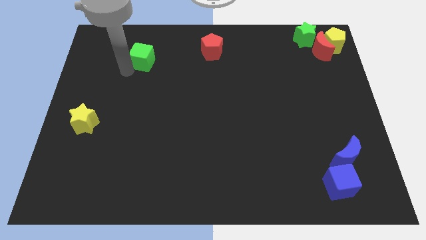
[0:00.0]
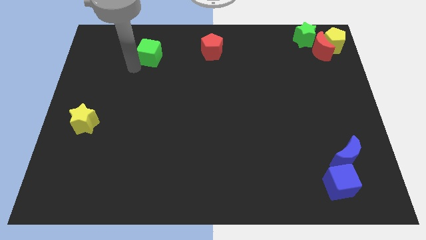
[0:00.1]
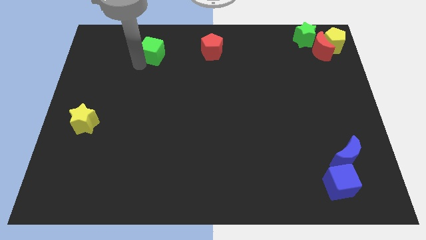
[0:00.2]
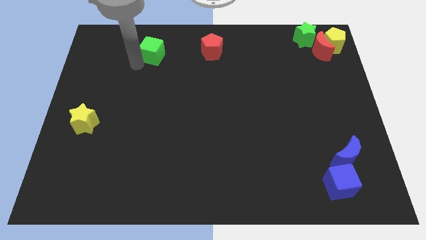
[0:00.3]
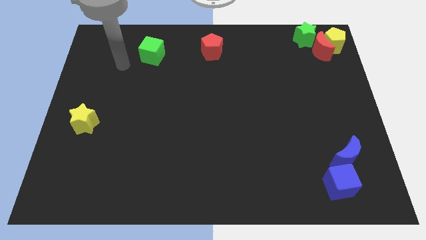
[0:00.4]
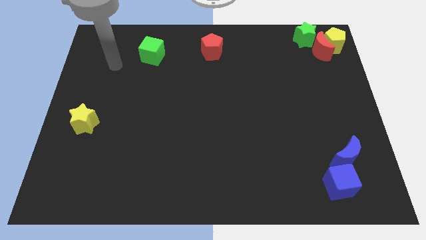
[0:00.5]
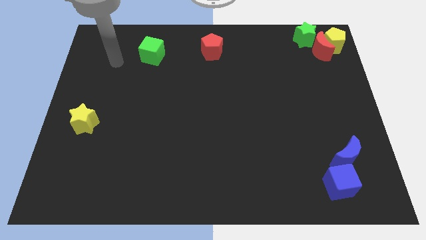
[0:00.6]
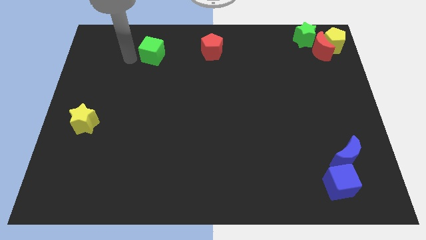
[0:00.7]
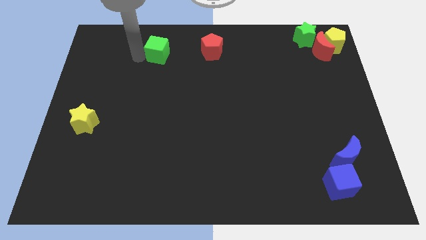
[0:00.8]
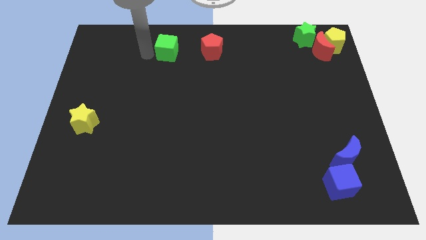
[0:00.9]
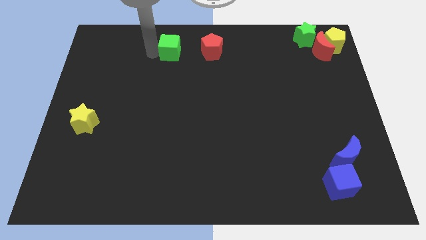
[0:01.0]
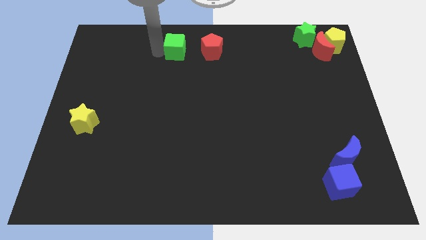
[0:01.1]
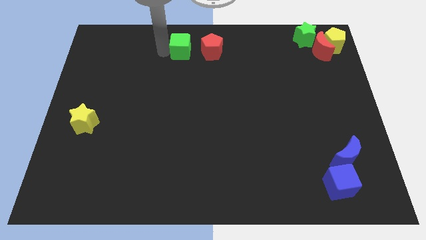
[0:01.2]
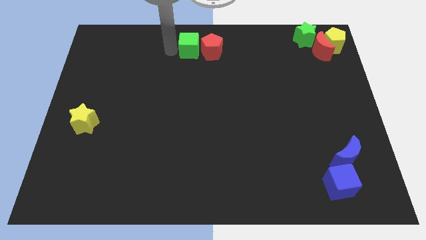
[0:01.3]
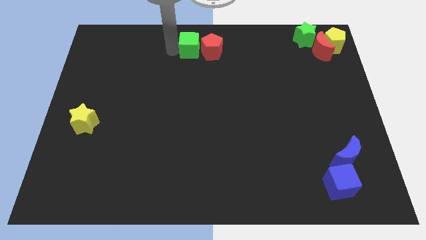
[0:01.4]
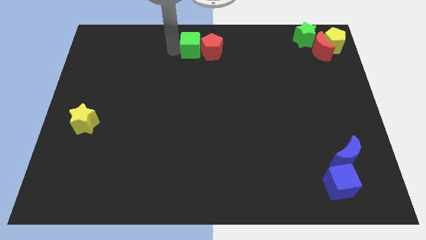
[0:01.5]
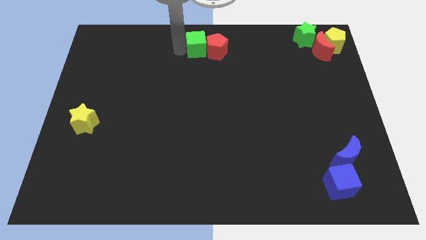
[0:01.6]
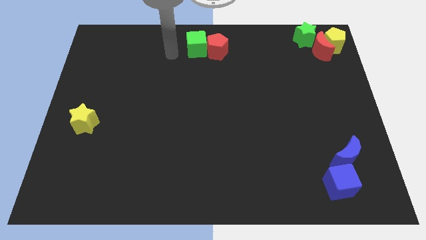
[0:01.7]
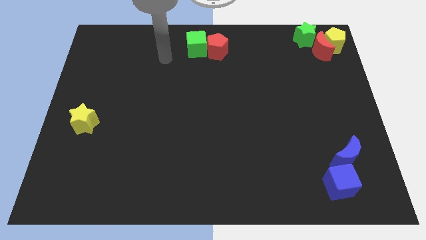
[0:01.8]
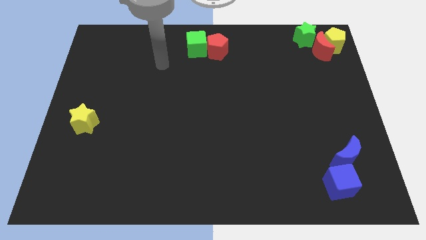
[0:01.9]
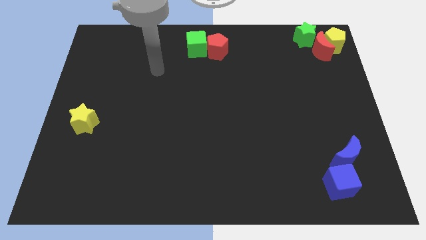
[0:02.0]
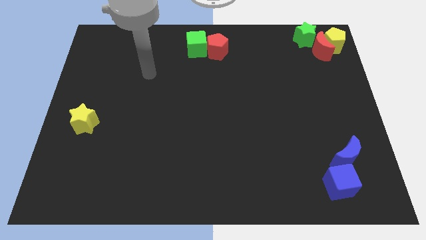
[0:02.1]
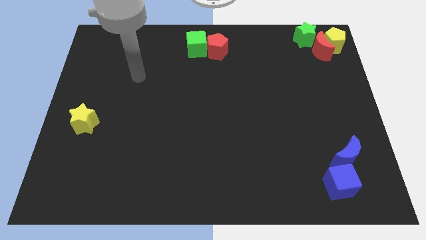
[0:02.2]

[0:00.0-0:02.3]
move the green cube into red pentagon

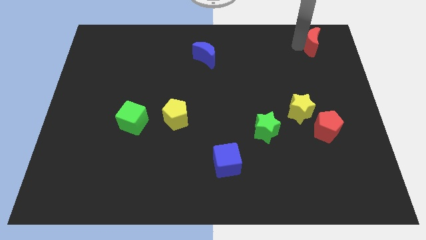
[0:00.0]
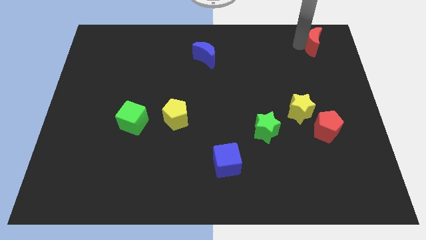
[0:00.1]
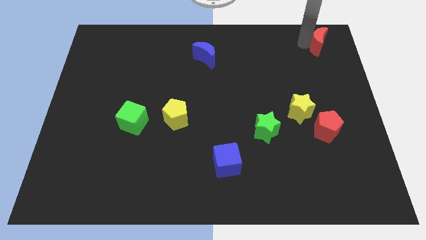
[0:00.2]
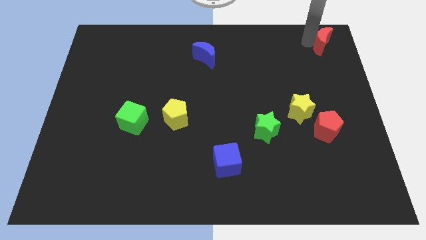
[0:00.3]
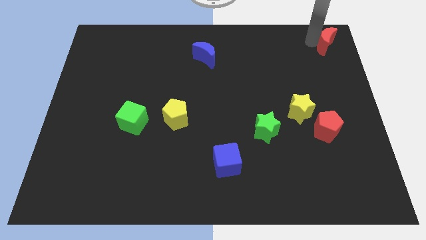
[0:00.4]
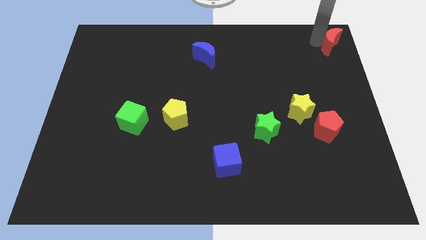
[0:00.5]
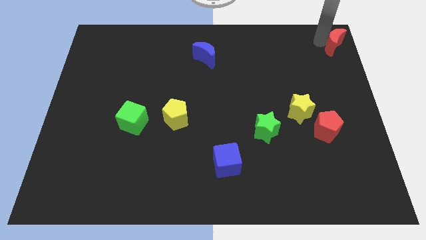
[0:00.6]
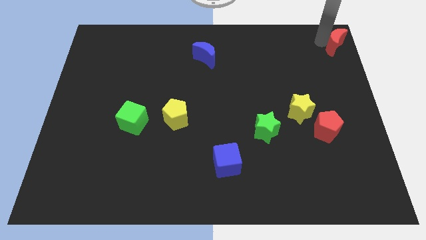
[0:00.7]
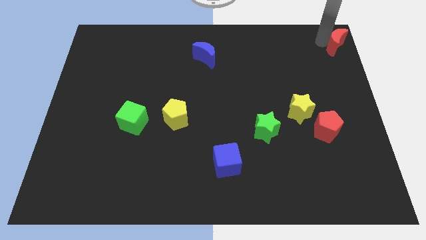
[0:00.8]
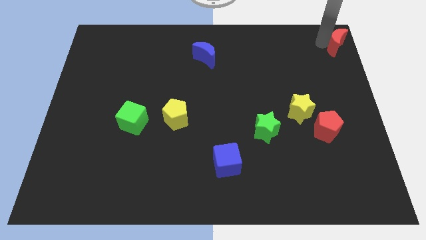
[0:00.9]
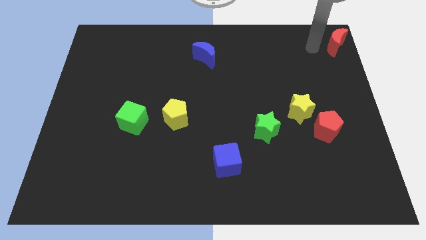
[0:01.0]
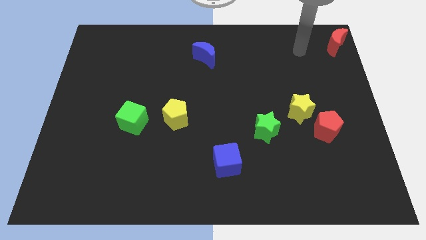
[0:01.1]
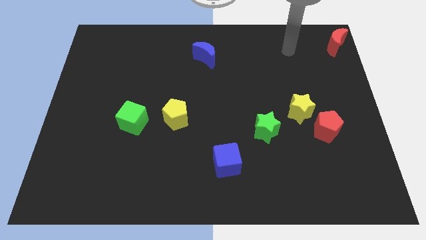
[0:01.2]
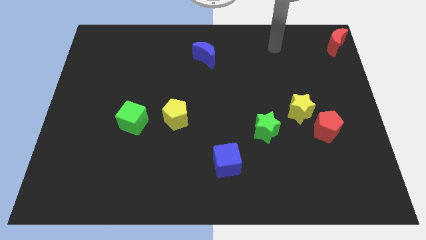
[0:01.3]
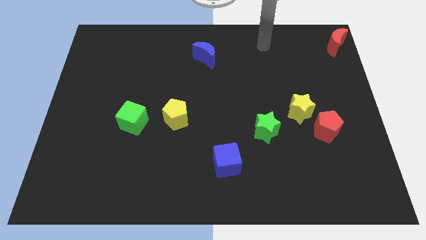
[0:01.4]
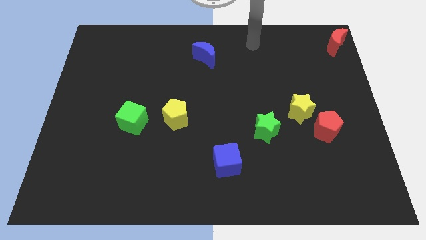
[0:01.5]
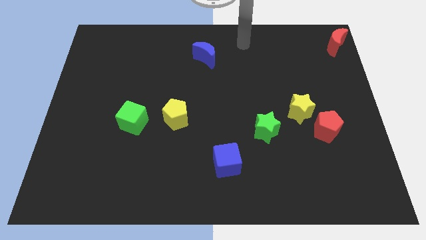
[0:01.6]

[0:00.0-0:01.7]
place the red moon to the top right corner

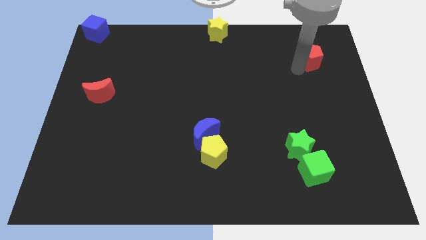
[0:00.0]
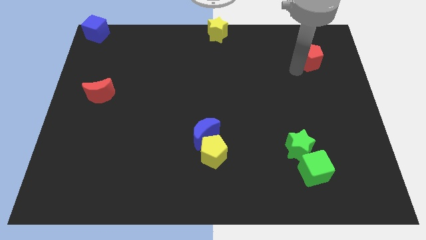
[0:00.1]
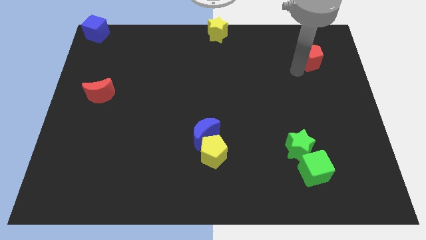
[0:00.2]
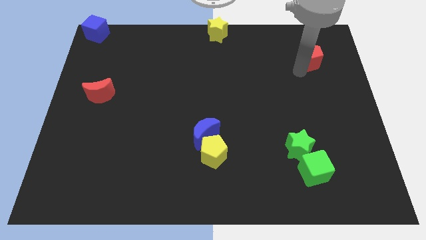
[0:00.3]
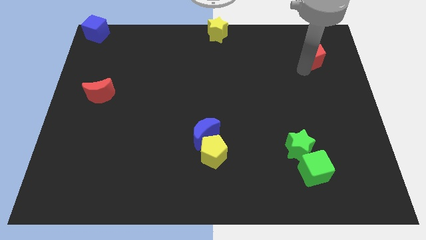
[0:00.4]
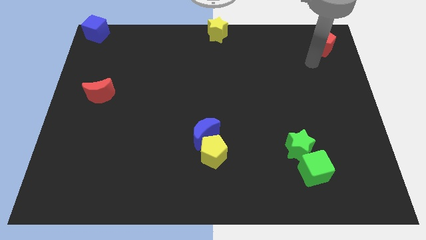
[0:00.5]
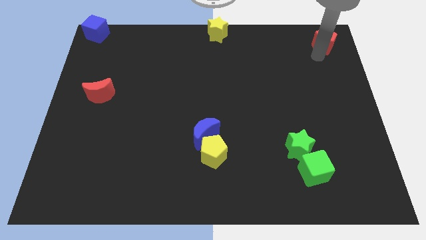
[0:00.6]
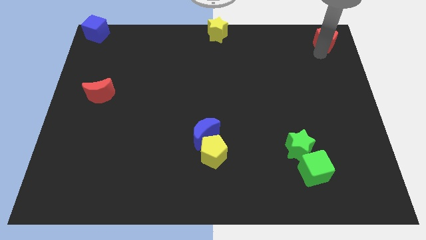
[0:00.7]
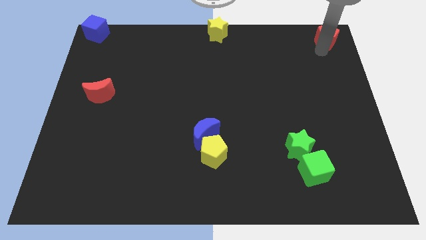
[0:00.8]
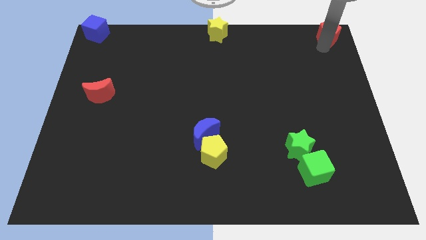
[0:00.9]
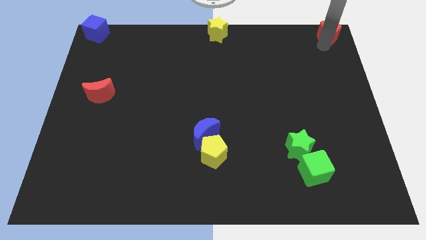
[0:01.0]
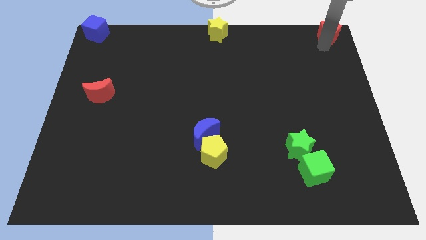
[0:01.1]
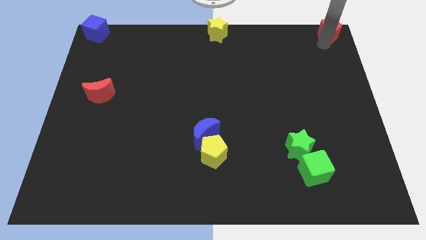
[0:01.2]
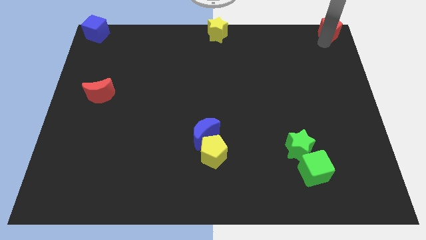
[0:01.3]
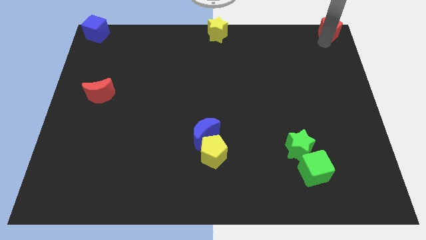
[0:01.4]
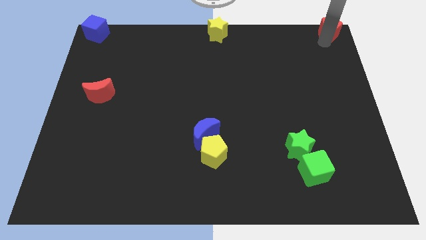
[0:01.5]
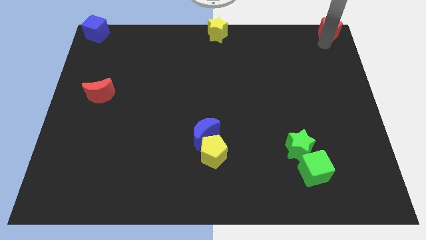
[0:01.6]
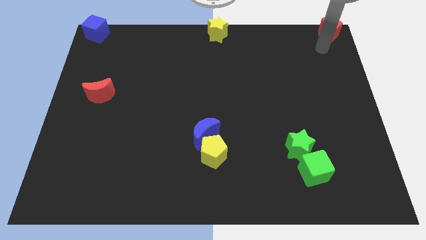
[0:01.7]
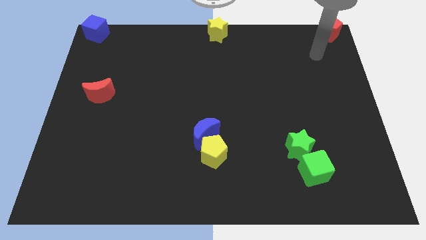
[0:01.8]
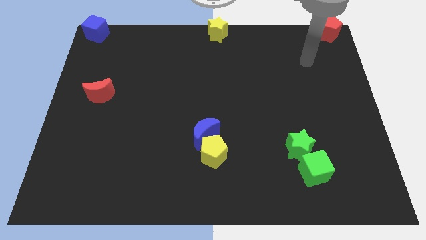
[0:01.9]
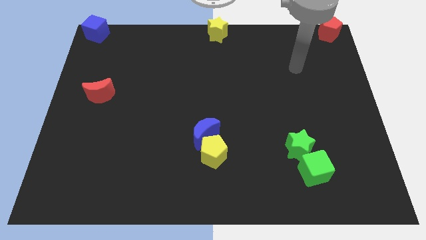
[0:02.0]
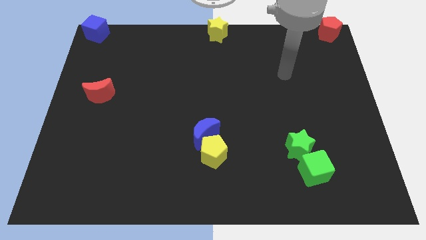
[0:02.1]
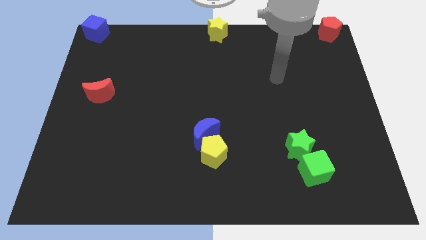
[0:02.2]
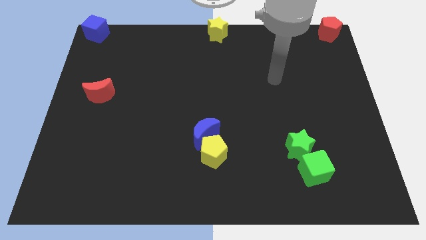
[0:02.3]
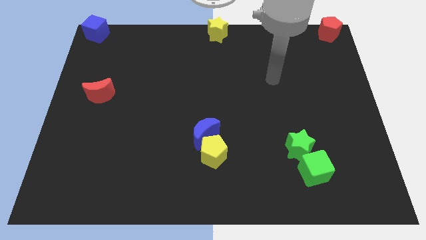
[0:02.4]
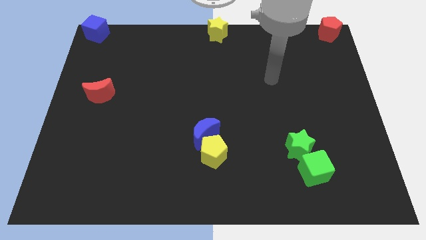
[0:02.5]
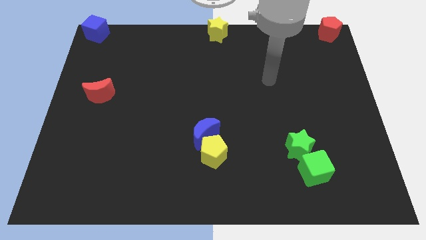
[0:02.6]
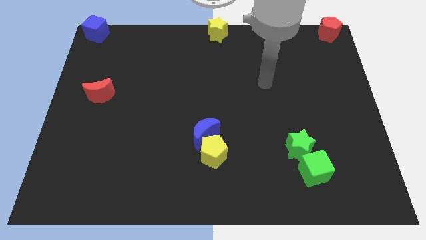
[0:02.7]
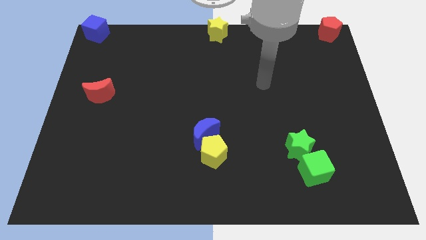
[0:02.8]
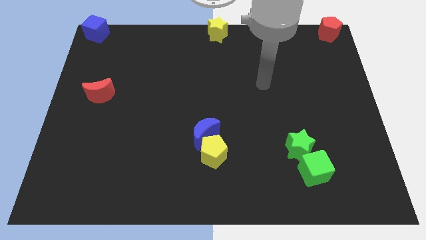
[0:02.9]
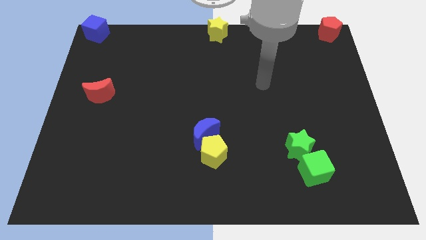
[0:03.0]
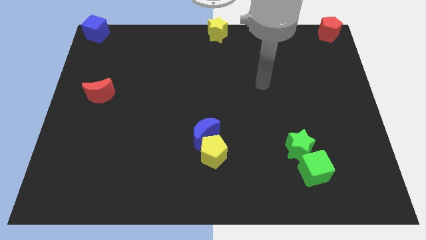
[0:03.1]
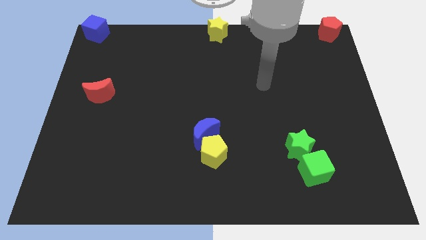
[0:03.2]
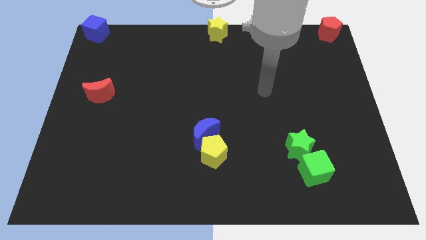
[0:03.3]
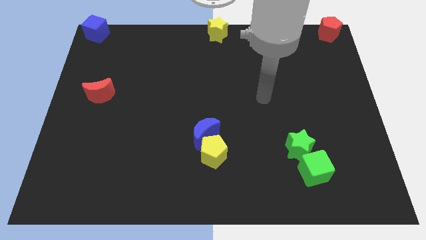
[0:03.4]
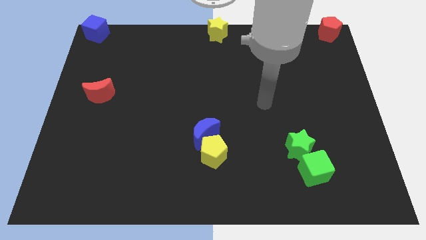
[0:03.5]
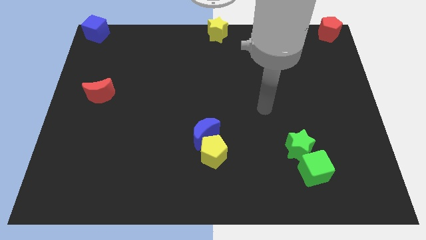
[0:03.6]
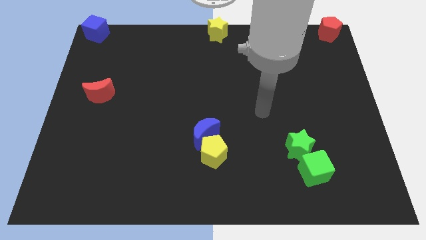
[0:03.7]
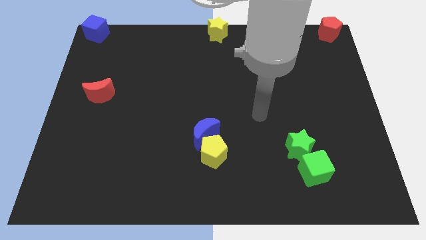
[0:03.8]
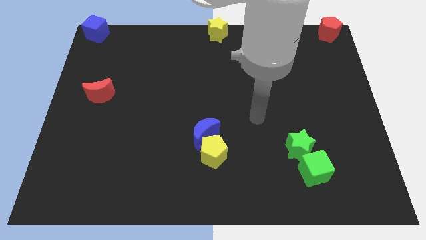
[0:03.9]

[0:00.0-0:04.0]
slide the red pentagon to the top right of the board

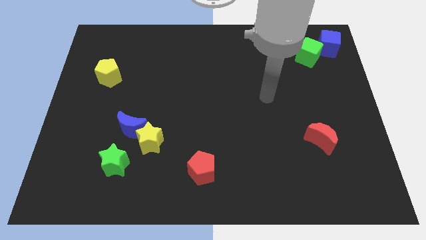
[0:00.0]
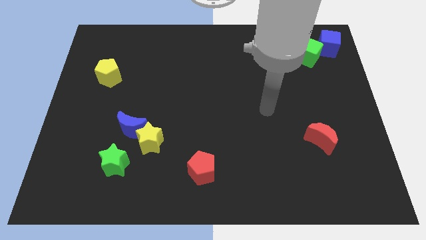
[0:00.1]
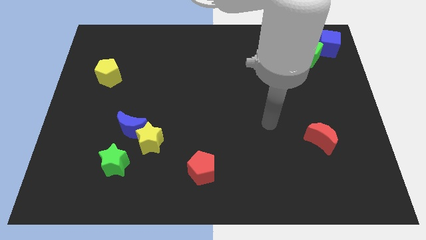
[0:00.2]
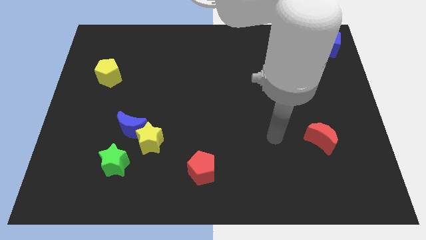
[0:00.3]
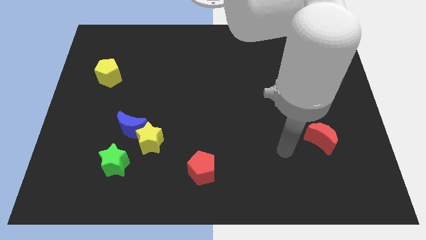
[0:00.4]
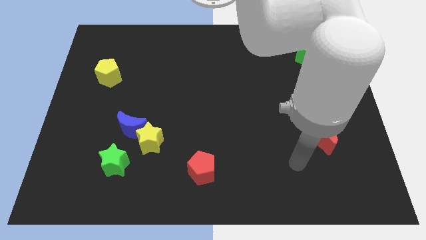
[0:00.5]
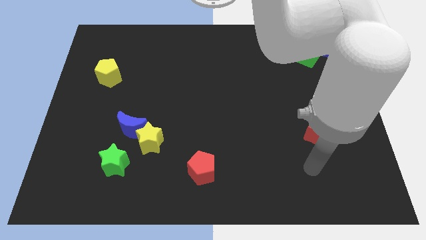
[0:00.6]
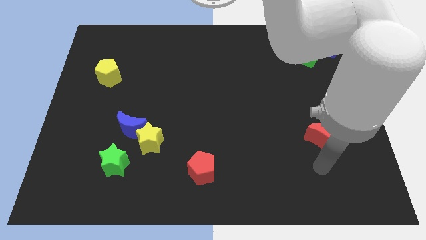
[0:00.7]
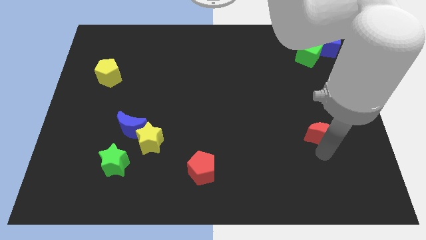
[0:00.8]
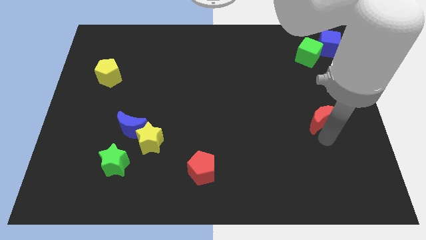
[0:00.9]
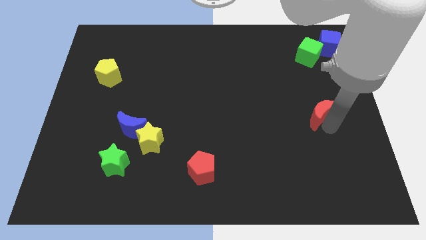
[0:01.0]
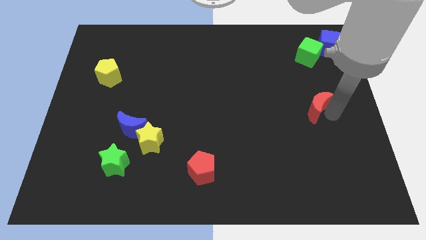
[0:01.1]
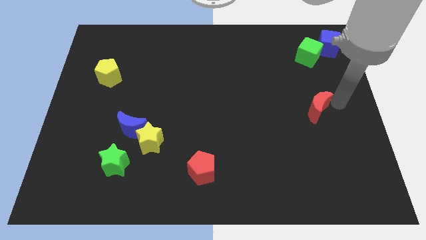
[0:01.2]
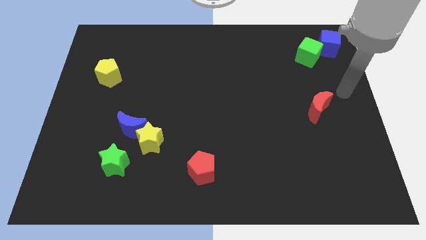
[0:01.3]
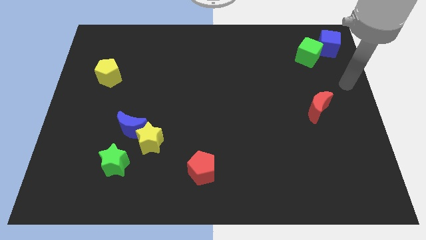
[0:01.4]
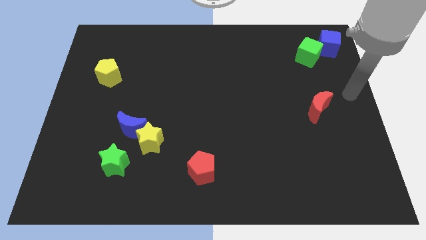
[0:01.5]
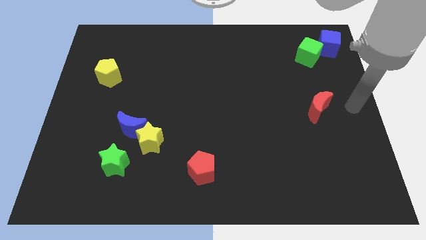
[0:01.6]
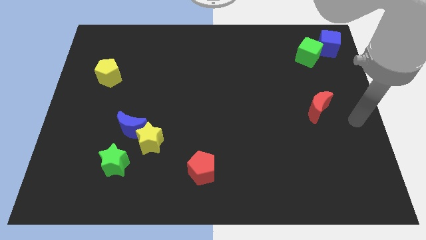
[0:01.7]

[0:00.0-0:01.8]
move the red crescent towards the group of cubes
